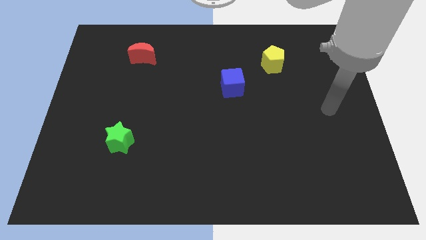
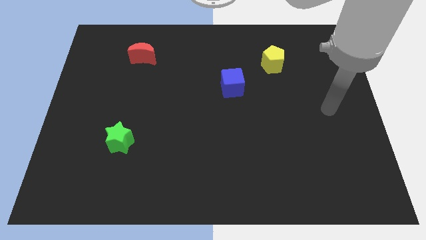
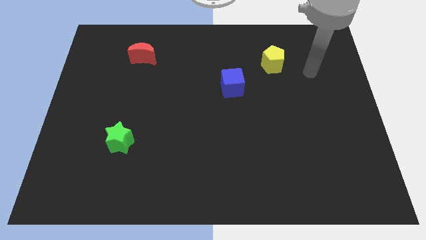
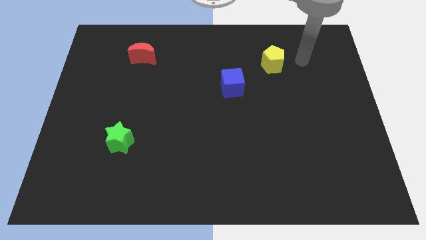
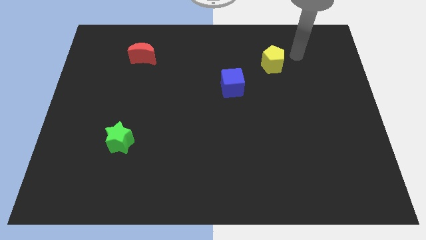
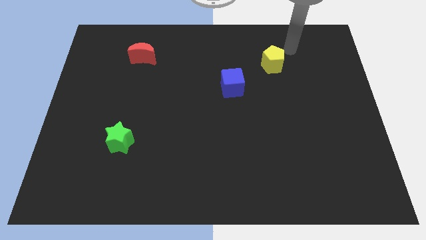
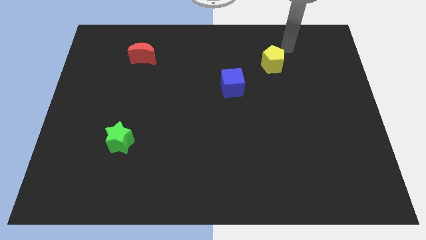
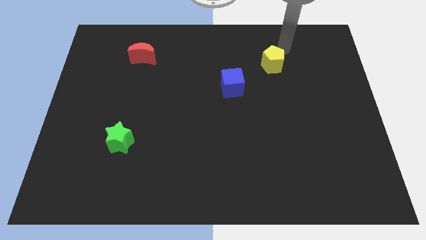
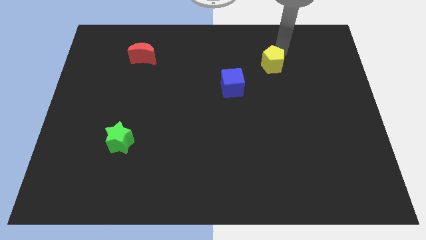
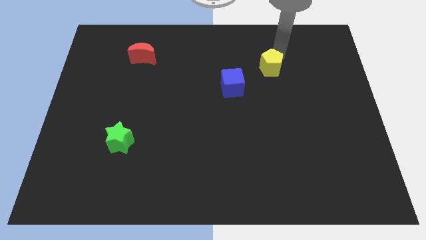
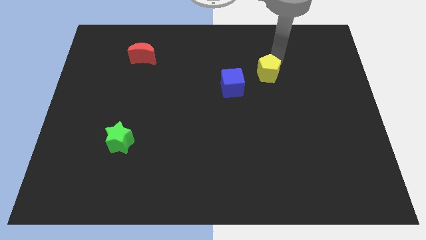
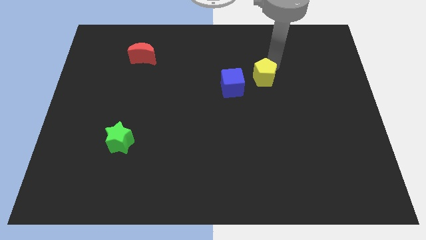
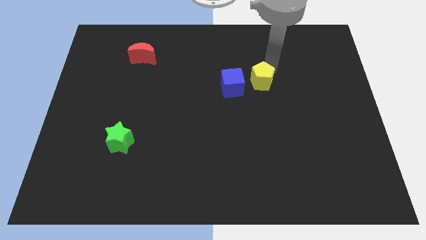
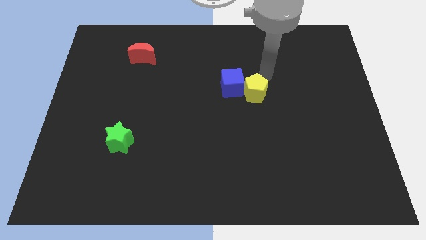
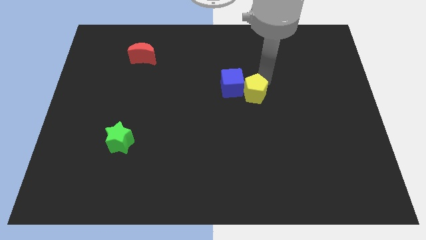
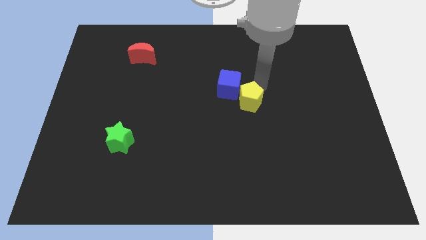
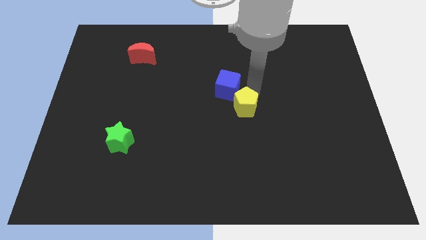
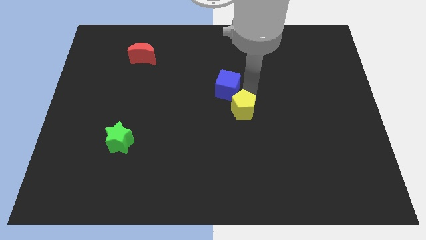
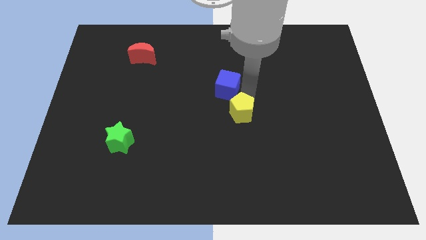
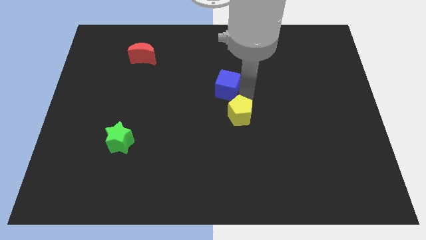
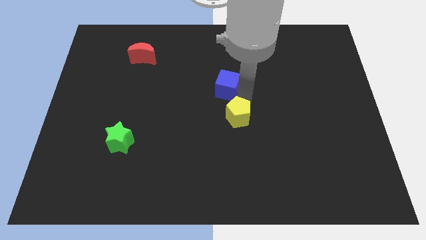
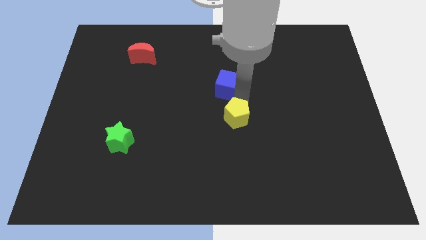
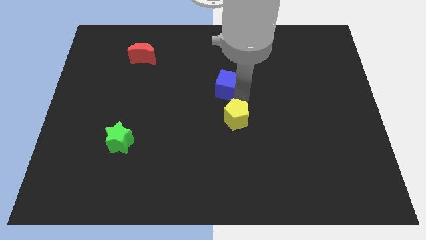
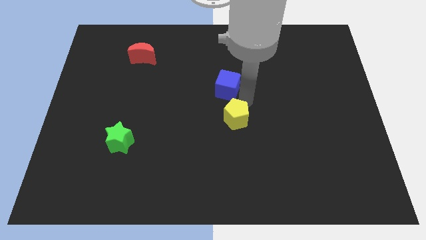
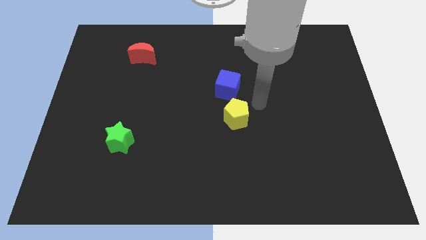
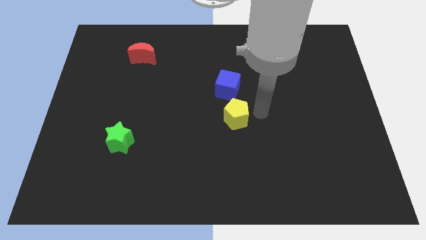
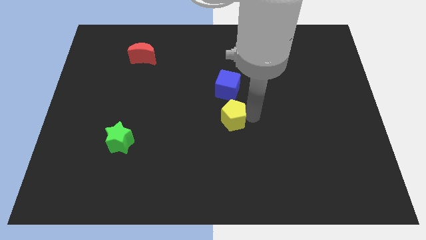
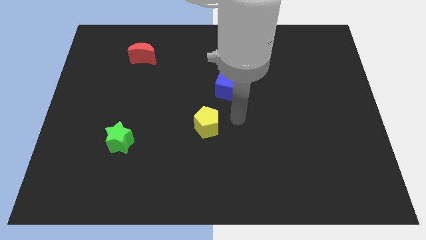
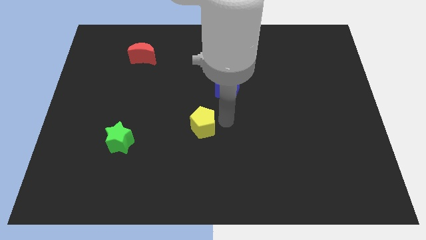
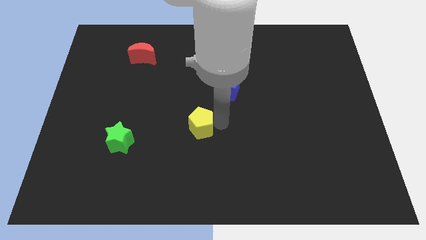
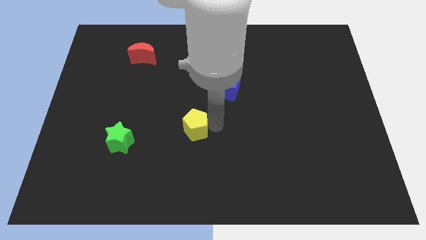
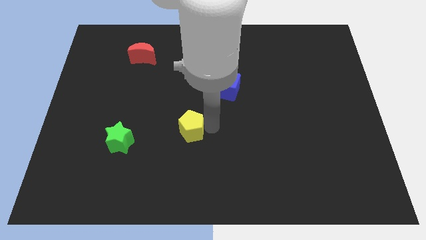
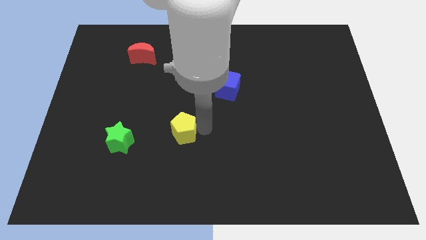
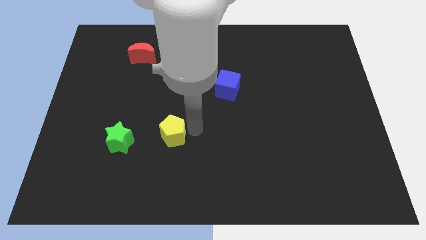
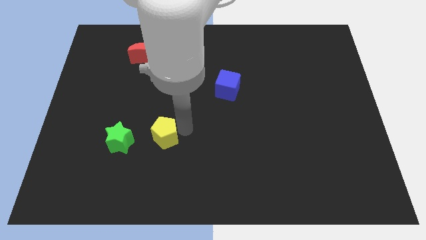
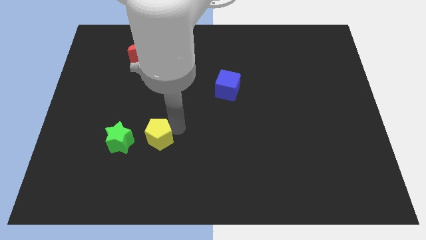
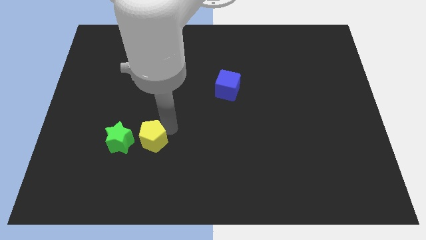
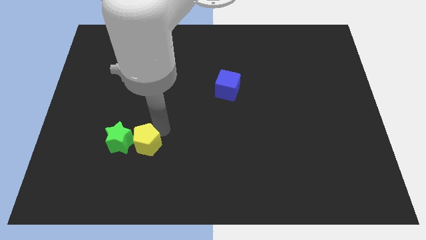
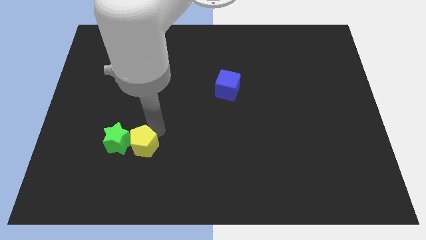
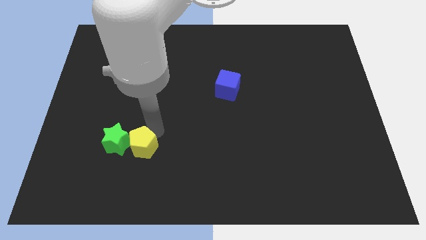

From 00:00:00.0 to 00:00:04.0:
put the yellow pentagon to the green star

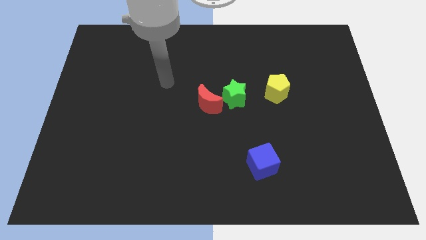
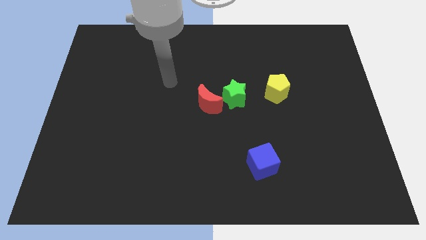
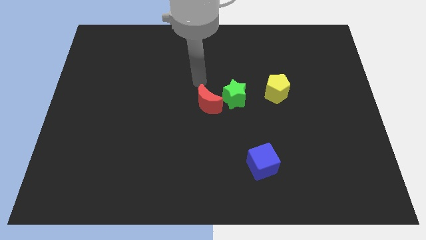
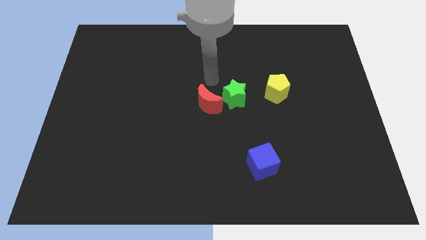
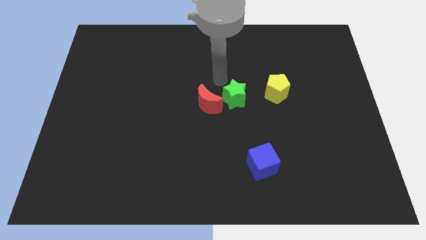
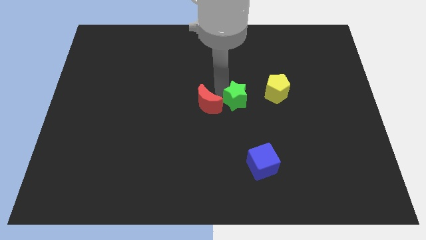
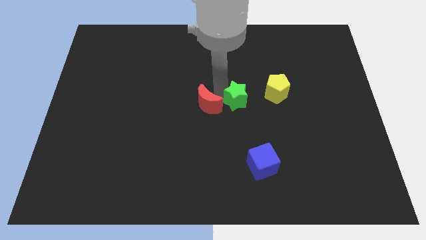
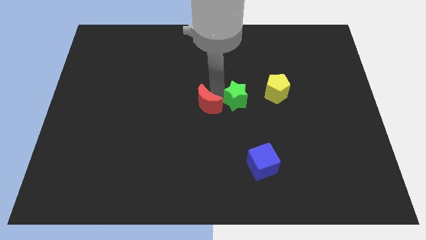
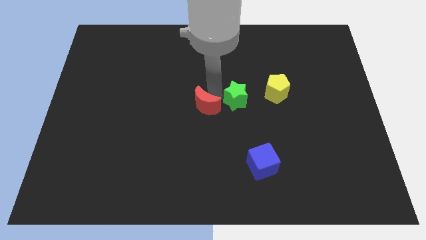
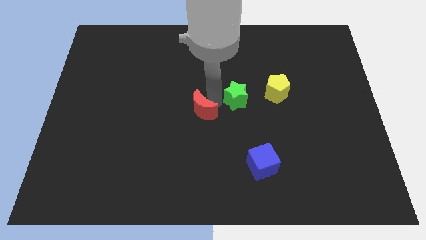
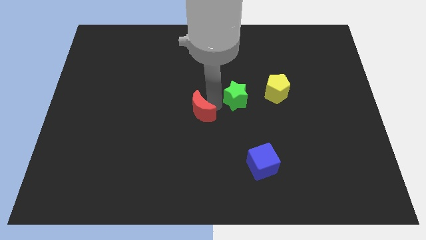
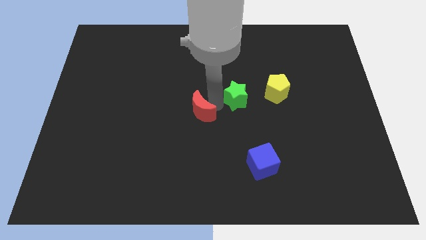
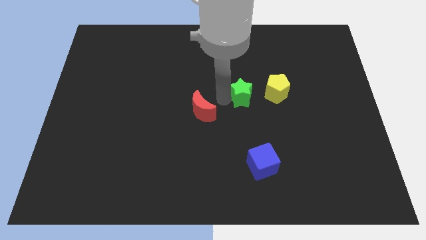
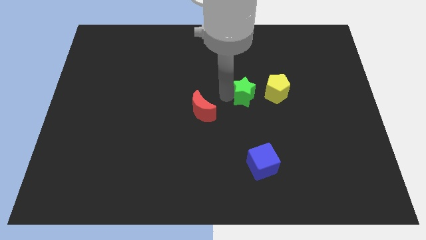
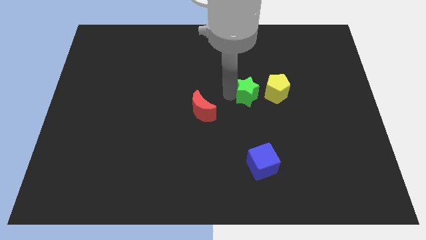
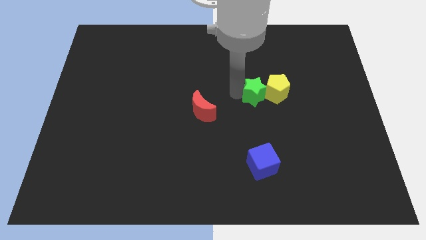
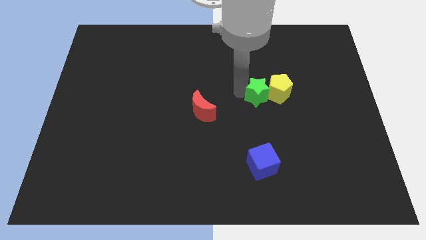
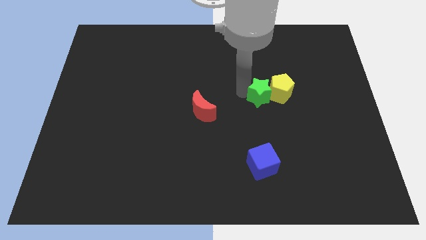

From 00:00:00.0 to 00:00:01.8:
move the green star next to the pentagon

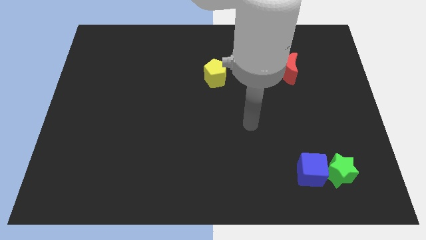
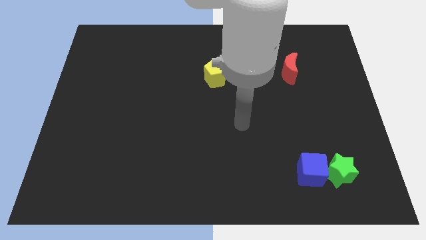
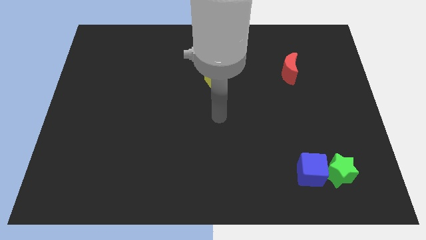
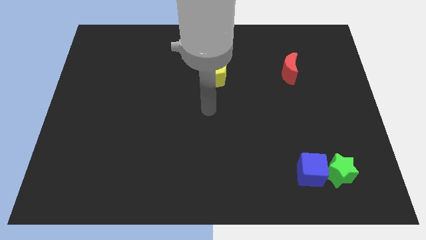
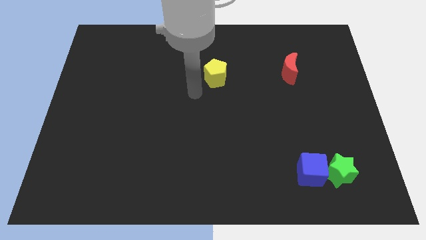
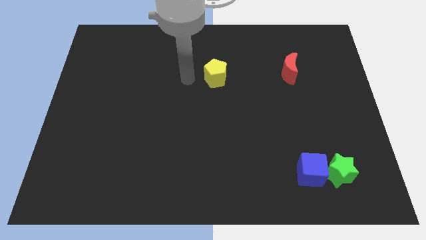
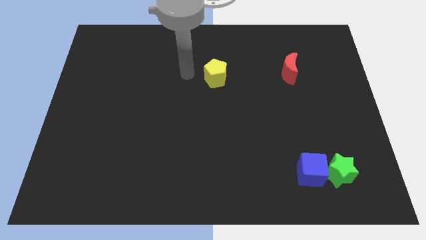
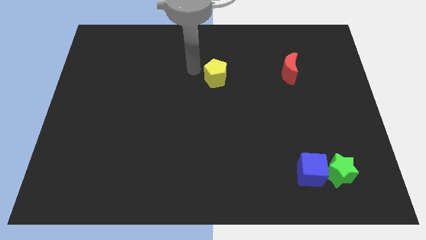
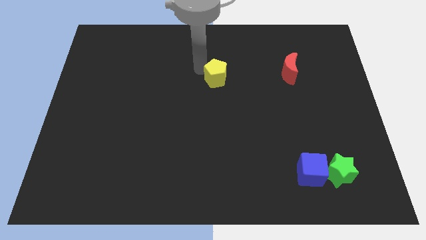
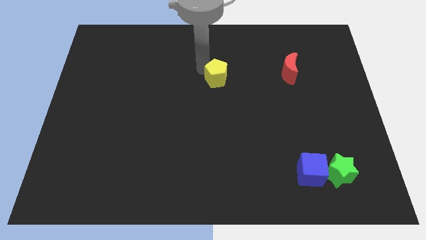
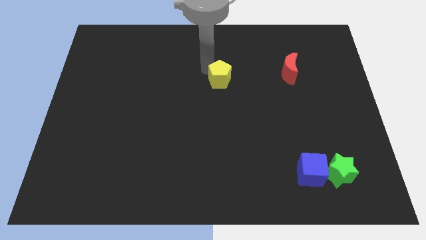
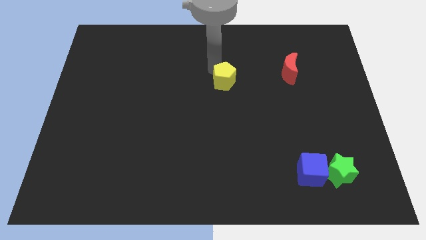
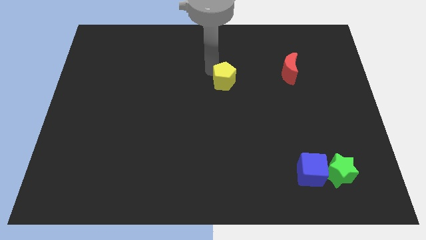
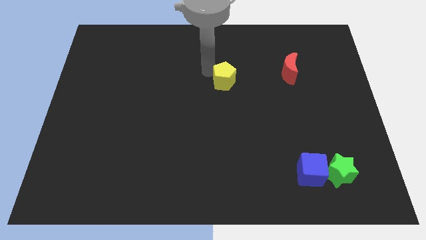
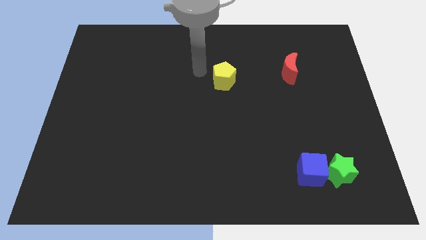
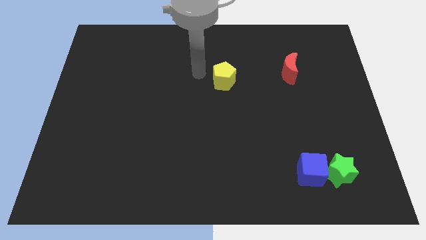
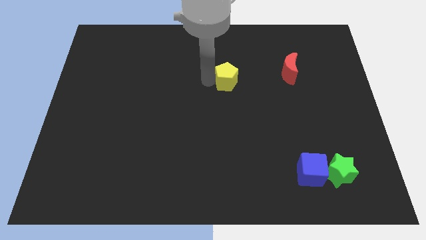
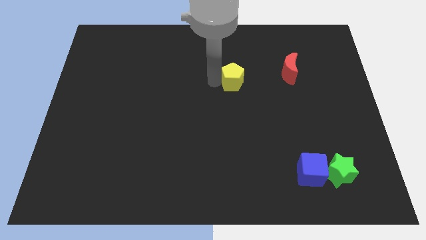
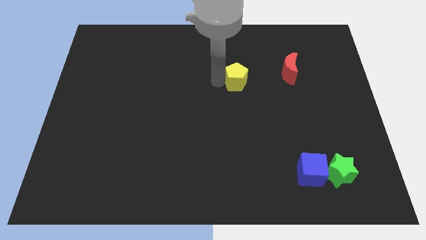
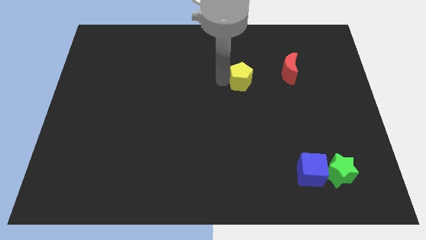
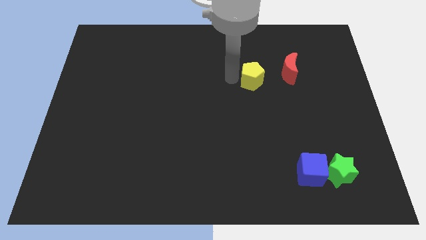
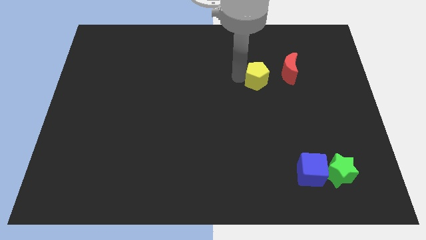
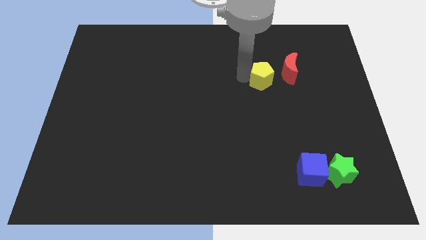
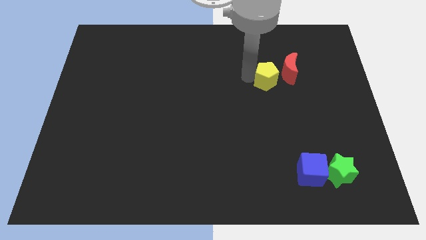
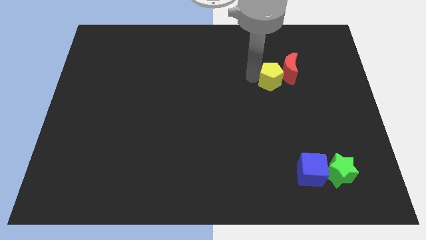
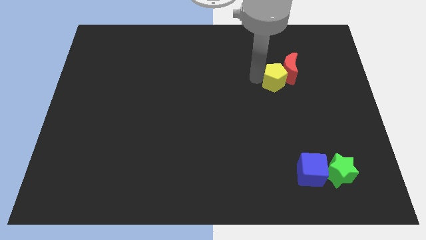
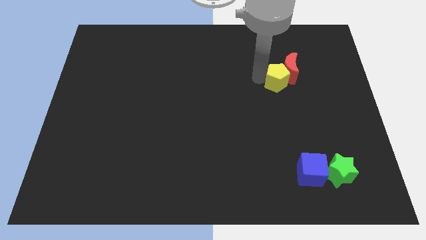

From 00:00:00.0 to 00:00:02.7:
push the pentagon towards the red moon

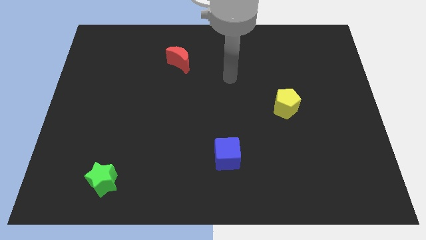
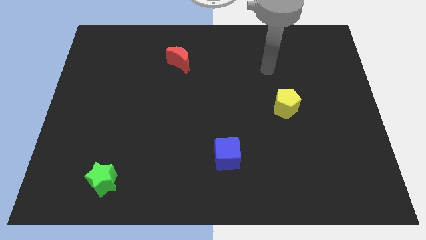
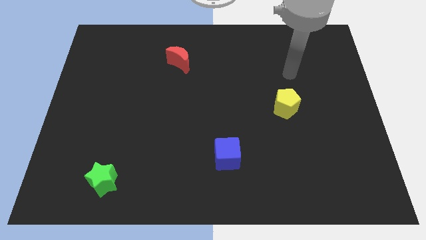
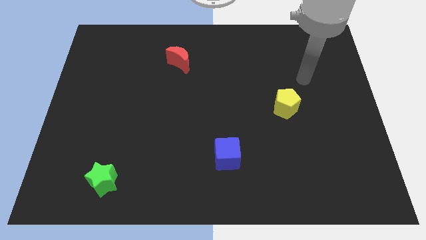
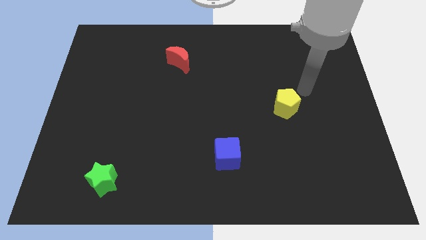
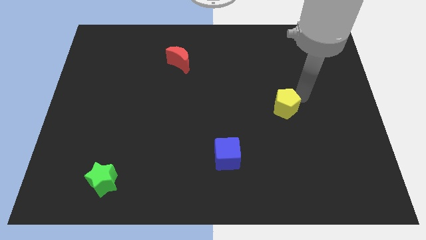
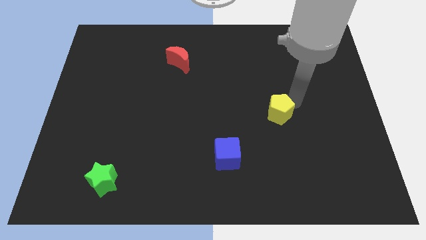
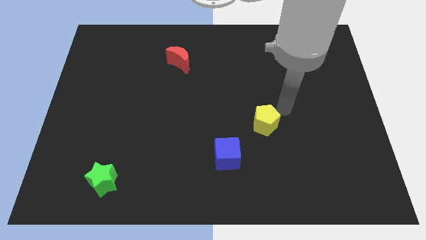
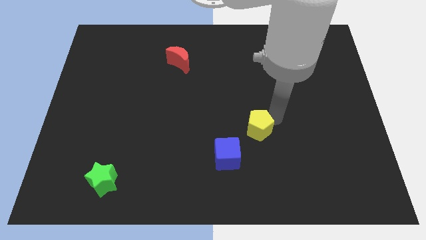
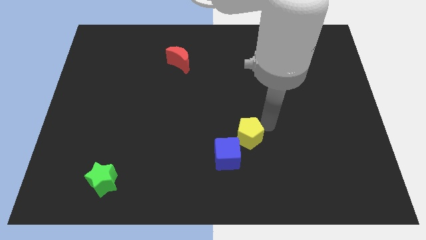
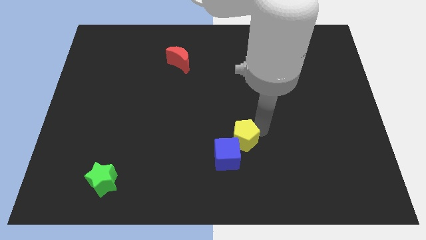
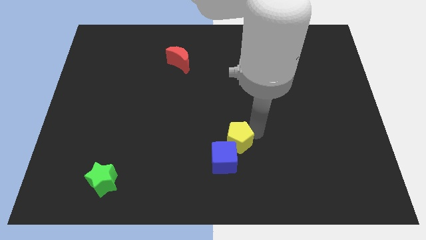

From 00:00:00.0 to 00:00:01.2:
move the yellow pentagon close to the blue block
